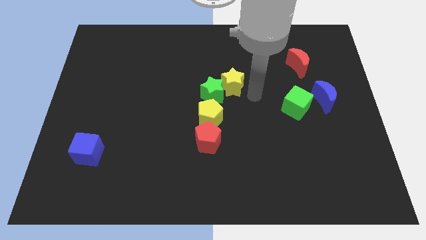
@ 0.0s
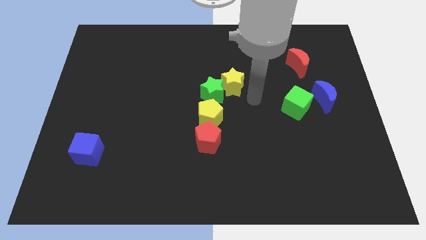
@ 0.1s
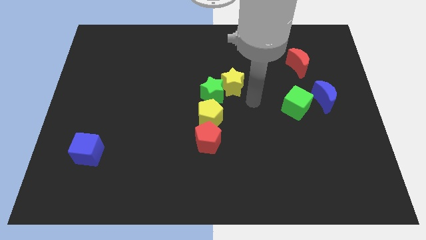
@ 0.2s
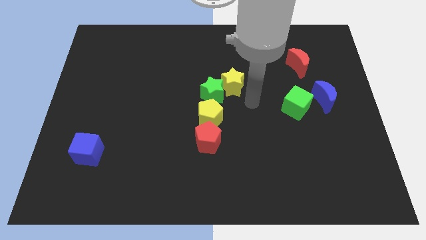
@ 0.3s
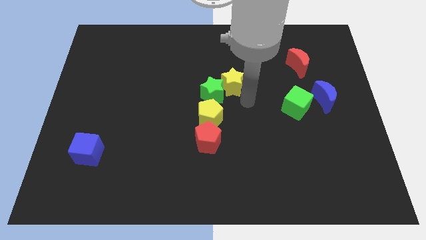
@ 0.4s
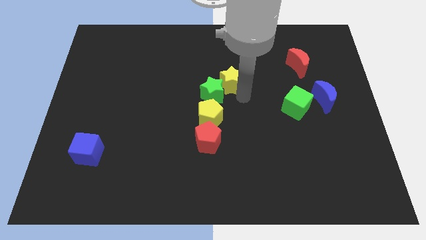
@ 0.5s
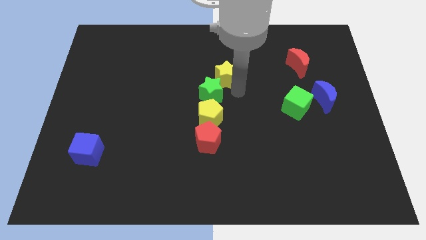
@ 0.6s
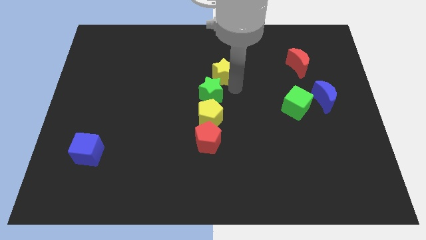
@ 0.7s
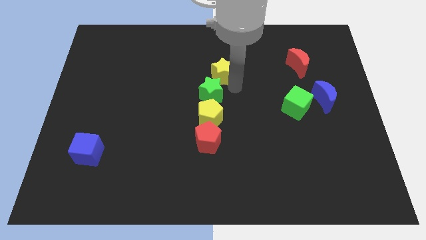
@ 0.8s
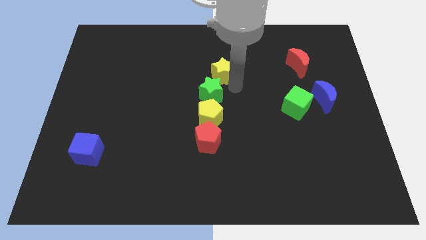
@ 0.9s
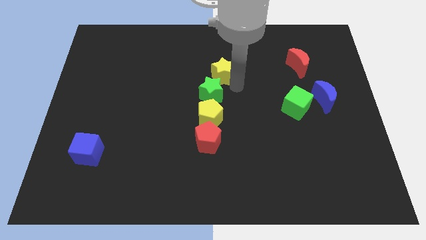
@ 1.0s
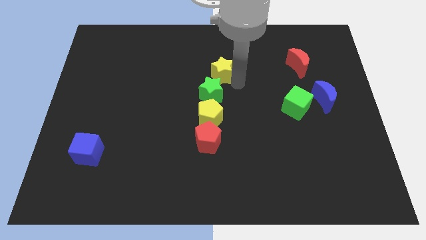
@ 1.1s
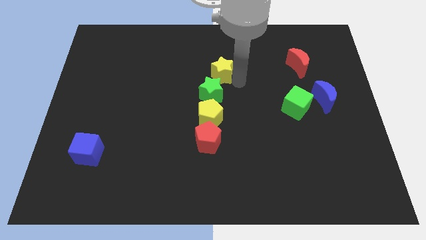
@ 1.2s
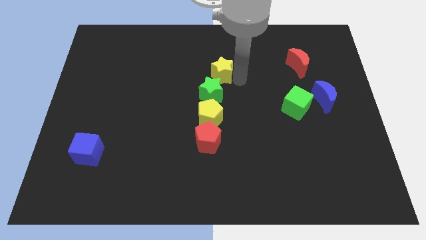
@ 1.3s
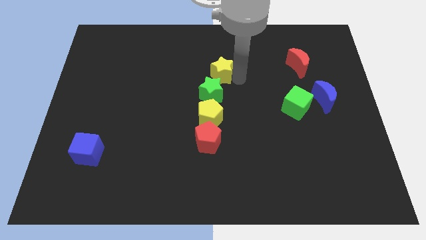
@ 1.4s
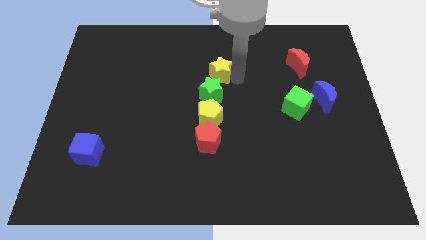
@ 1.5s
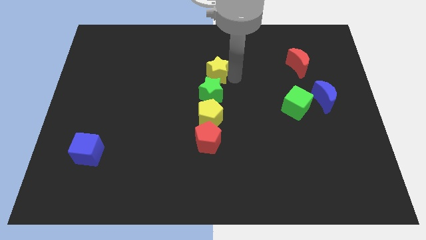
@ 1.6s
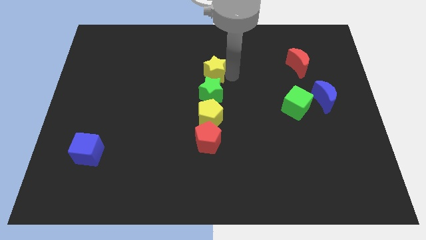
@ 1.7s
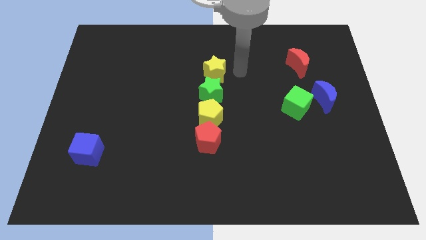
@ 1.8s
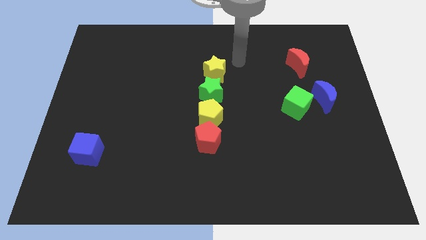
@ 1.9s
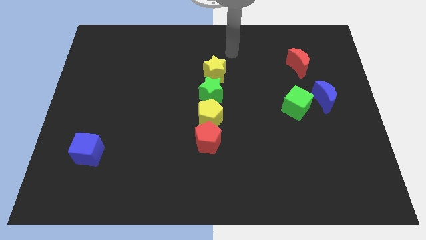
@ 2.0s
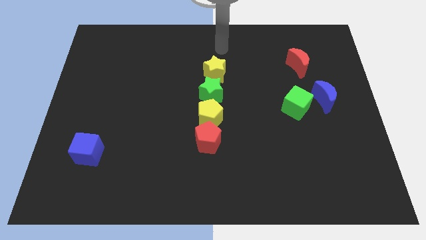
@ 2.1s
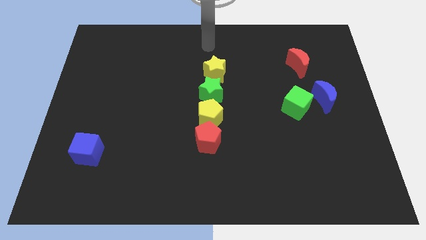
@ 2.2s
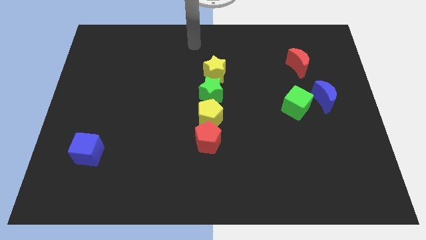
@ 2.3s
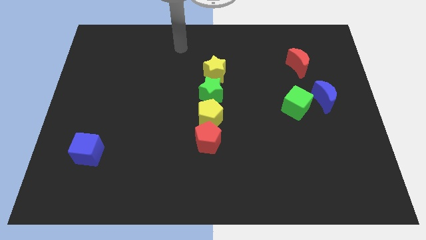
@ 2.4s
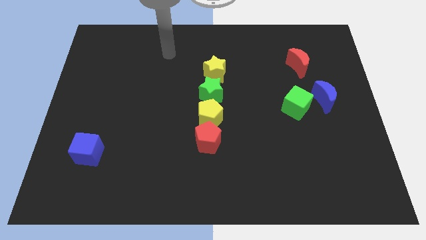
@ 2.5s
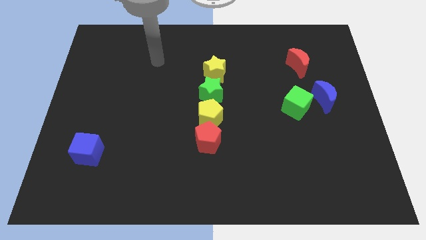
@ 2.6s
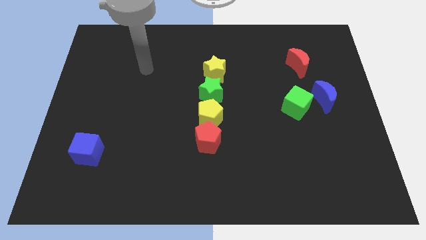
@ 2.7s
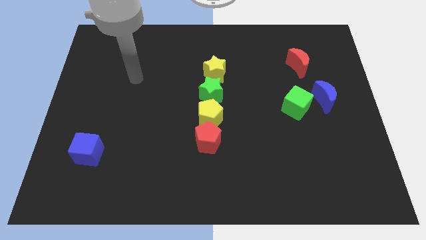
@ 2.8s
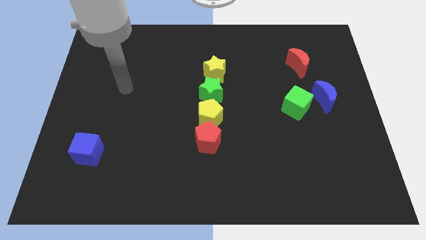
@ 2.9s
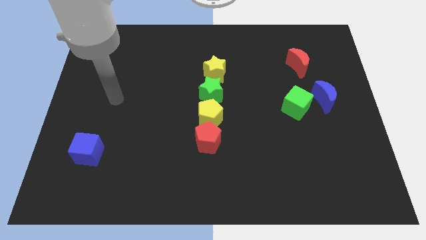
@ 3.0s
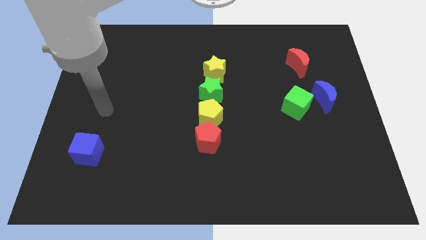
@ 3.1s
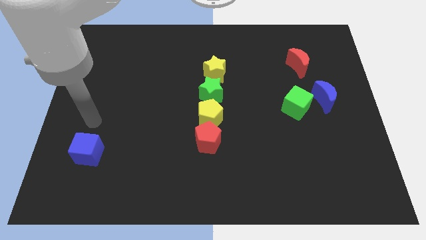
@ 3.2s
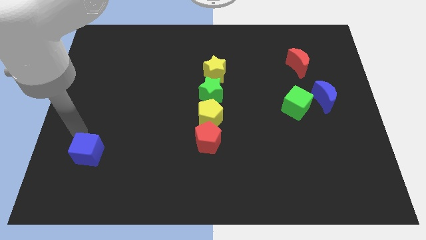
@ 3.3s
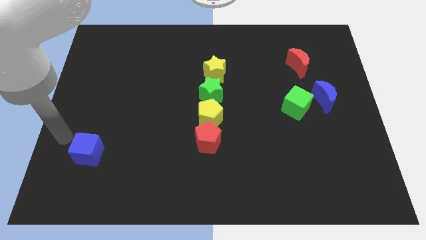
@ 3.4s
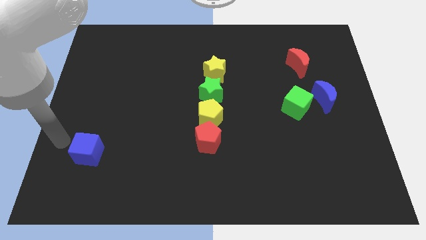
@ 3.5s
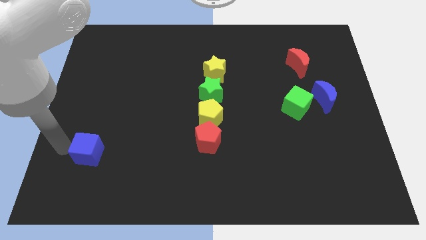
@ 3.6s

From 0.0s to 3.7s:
move arm near blue cube

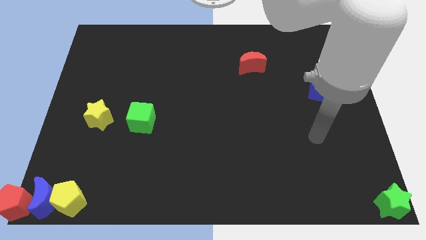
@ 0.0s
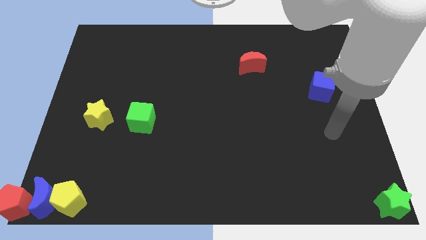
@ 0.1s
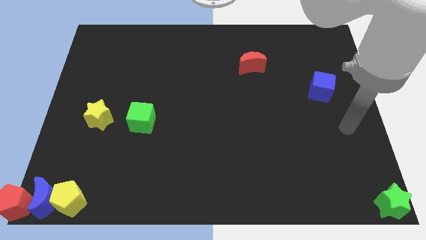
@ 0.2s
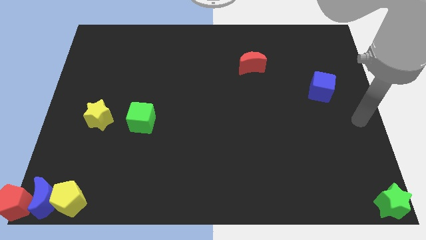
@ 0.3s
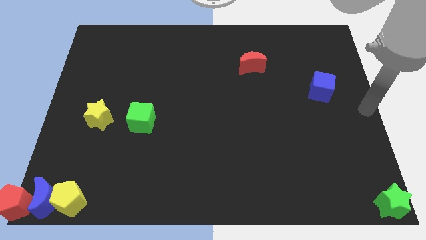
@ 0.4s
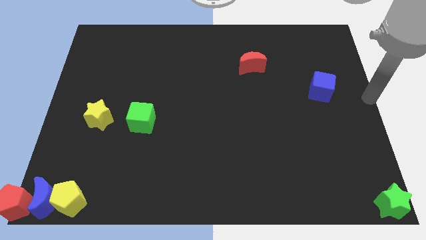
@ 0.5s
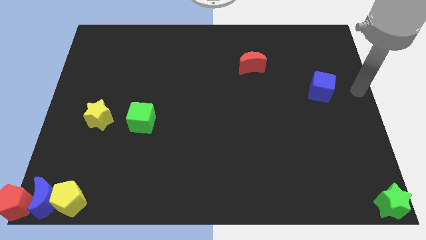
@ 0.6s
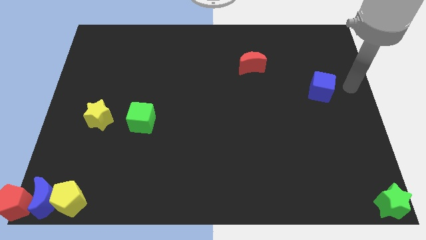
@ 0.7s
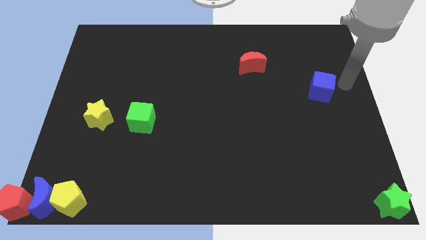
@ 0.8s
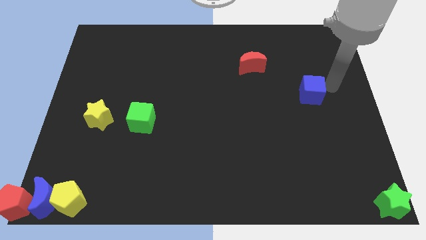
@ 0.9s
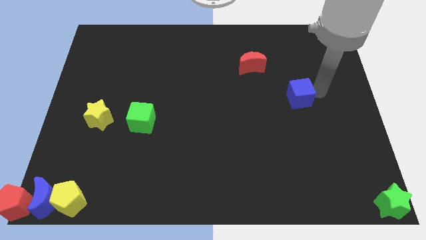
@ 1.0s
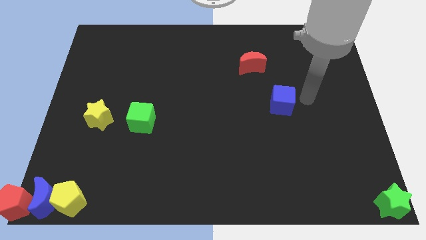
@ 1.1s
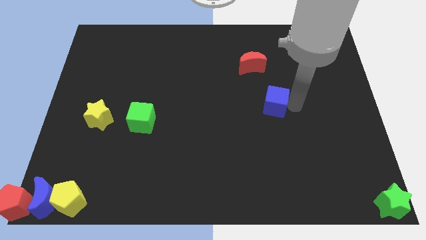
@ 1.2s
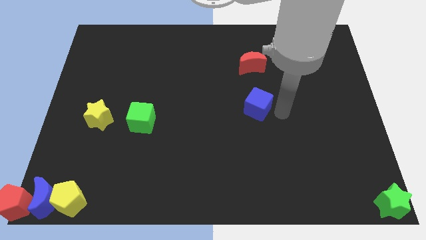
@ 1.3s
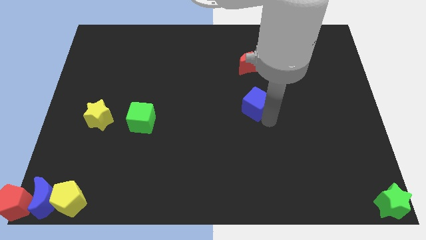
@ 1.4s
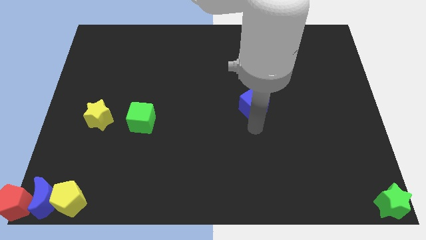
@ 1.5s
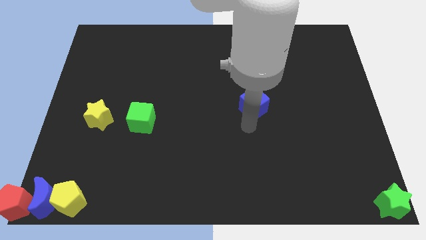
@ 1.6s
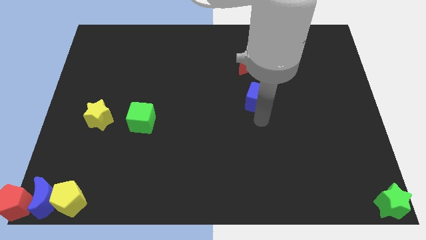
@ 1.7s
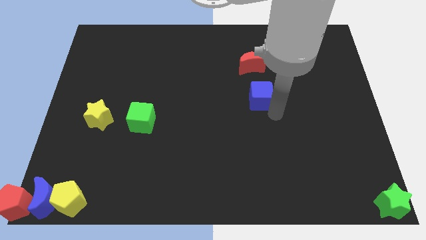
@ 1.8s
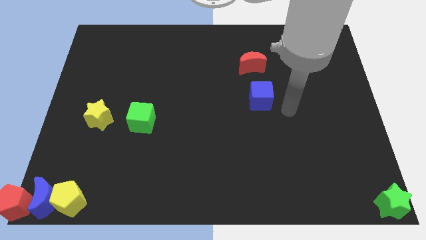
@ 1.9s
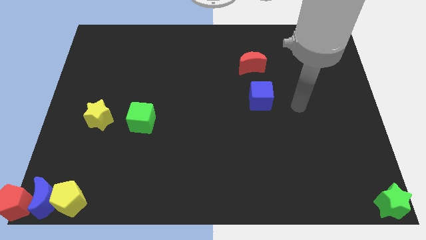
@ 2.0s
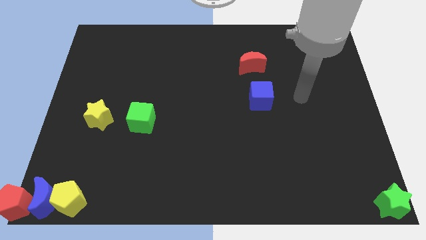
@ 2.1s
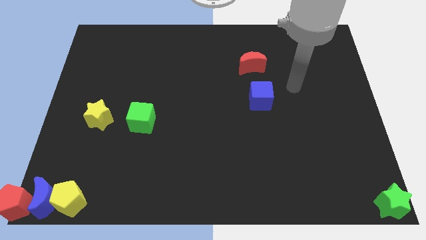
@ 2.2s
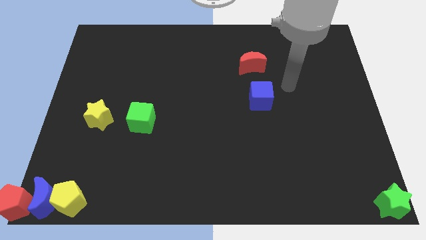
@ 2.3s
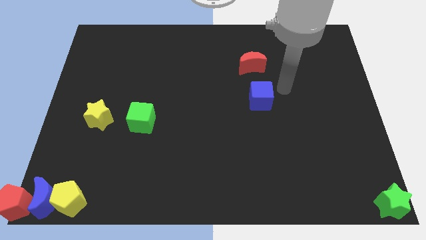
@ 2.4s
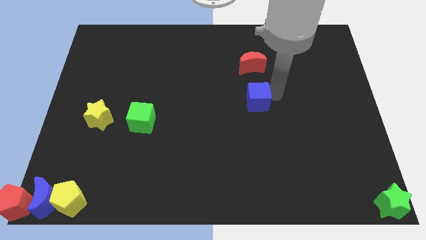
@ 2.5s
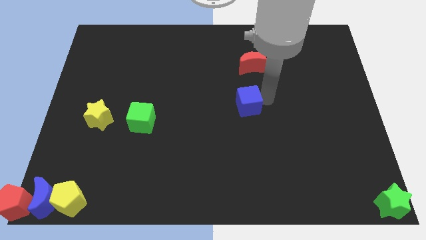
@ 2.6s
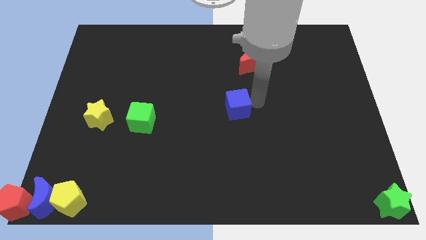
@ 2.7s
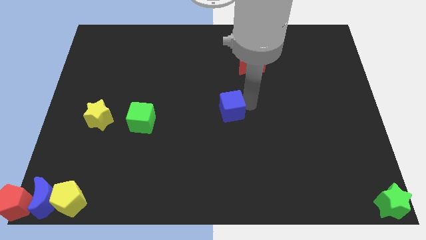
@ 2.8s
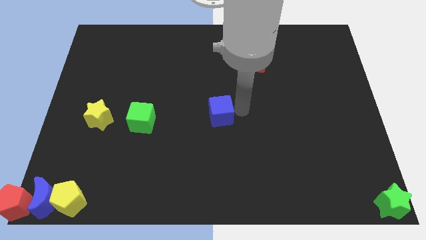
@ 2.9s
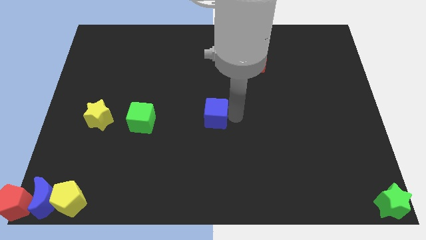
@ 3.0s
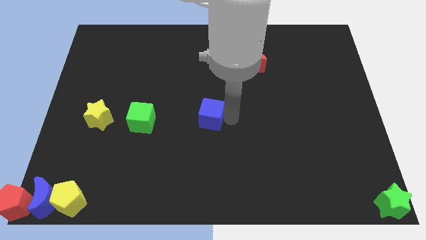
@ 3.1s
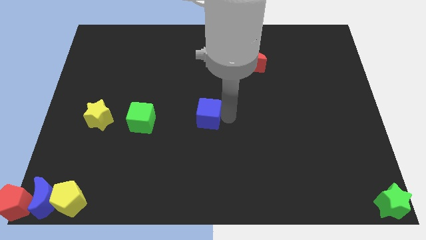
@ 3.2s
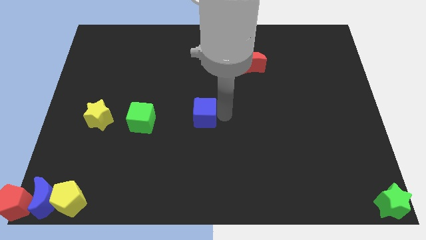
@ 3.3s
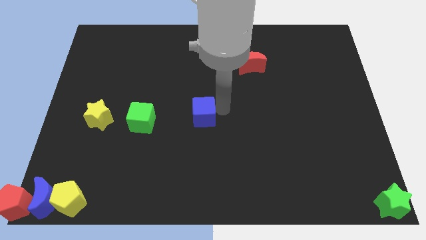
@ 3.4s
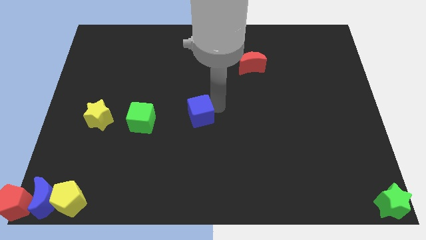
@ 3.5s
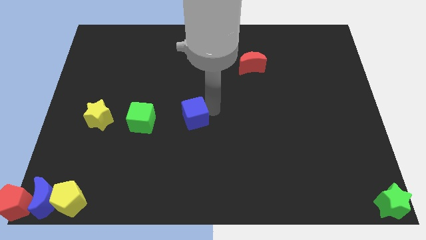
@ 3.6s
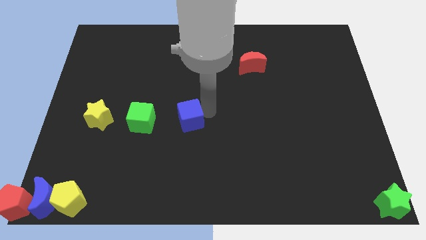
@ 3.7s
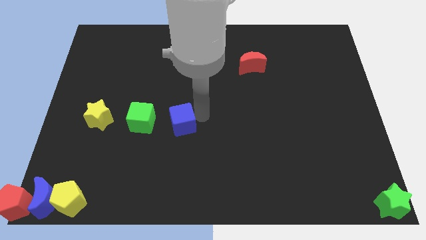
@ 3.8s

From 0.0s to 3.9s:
push blue cube to the horizontal right side of the green cube

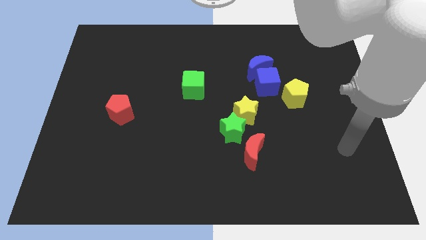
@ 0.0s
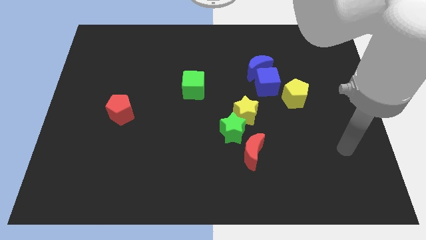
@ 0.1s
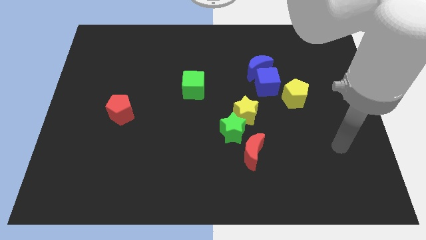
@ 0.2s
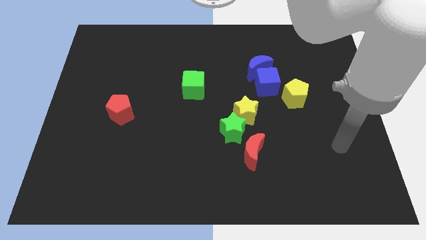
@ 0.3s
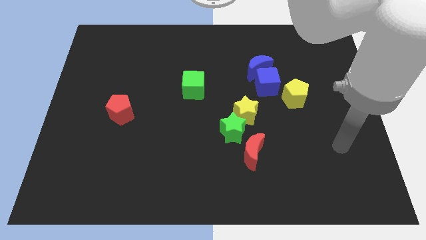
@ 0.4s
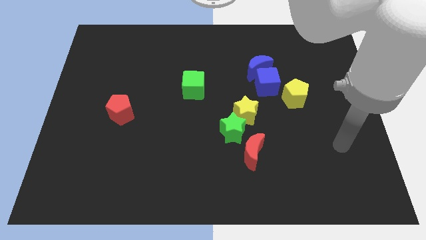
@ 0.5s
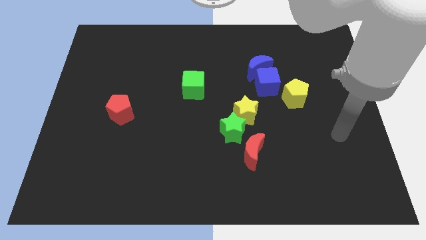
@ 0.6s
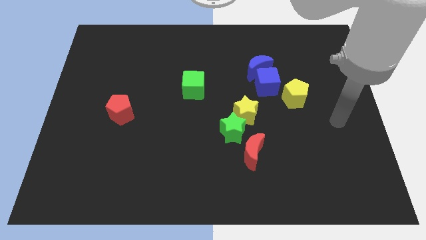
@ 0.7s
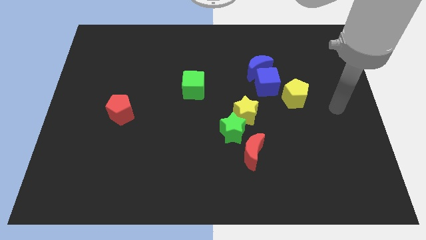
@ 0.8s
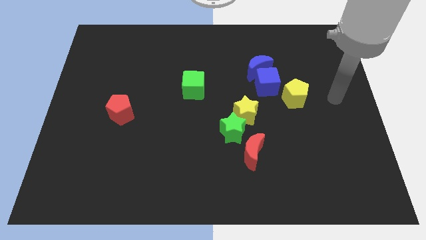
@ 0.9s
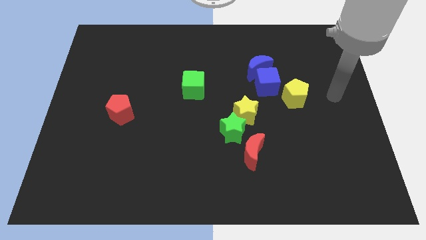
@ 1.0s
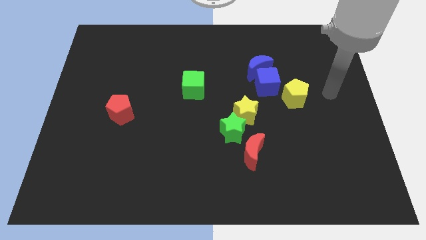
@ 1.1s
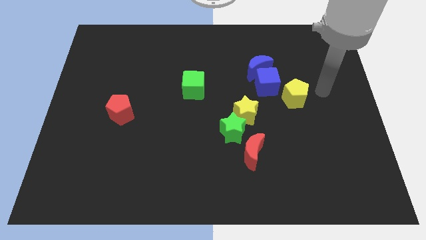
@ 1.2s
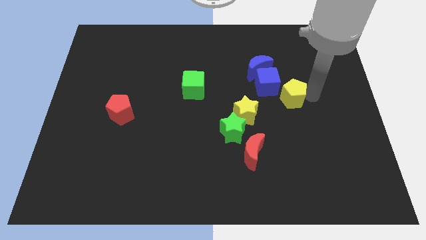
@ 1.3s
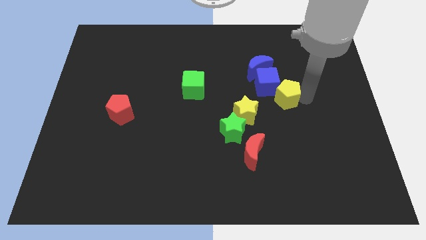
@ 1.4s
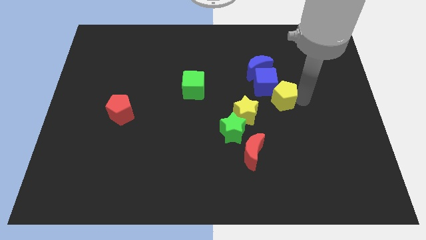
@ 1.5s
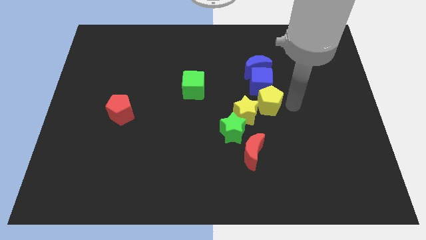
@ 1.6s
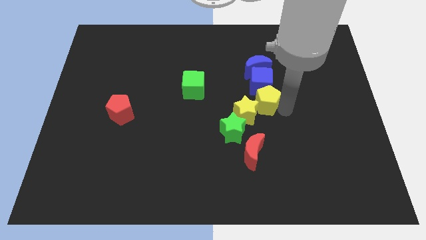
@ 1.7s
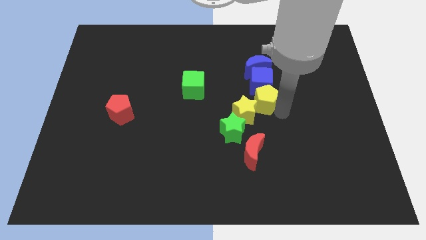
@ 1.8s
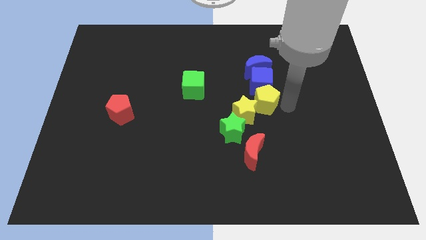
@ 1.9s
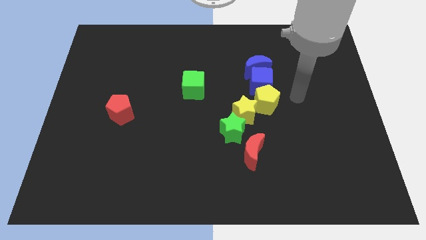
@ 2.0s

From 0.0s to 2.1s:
move yellow pentagon close to the yellow star
